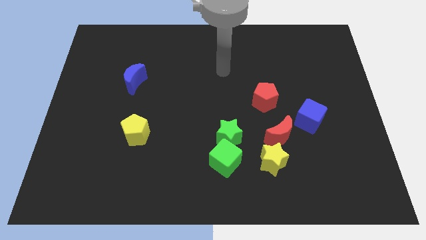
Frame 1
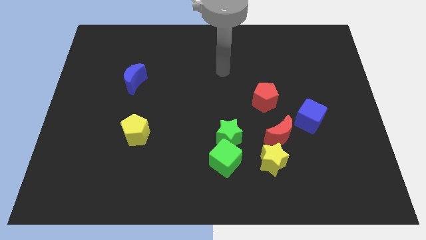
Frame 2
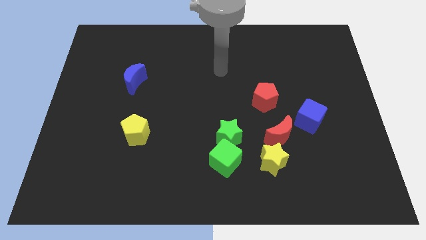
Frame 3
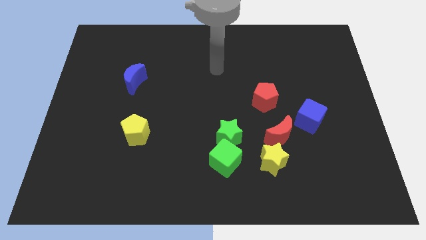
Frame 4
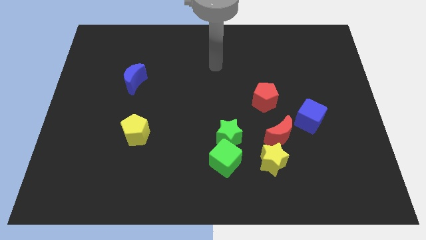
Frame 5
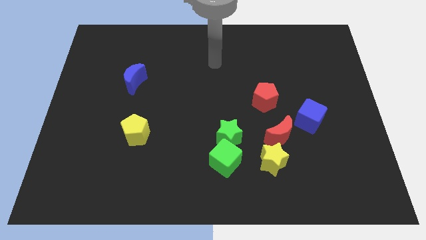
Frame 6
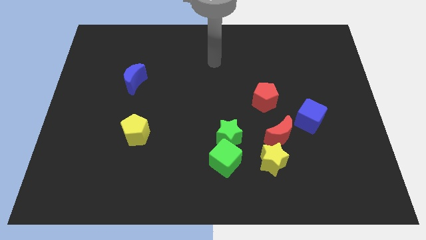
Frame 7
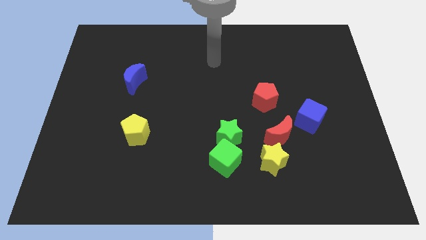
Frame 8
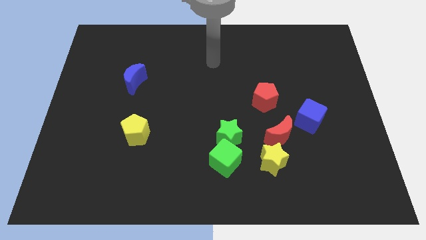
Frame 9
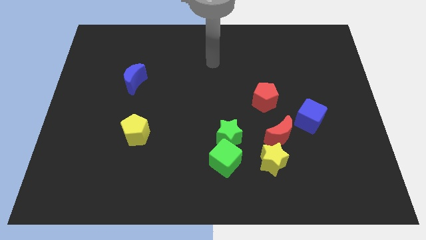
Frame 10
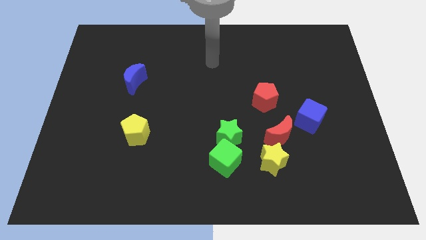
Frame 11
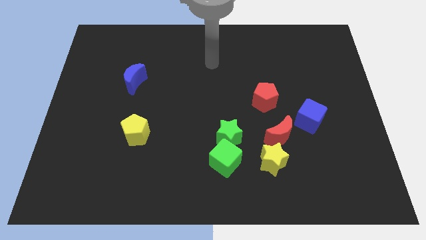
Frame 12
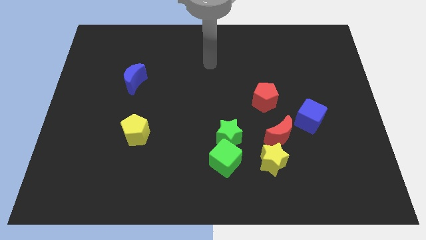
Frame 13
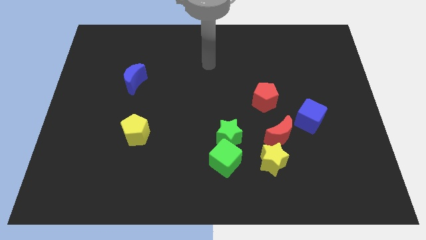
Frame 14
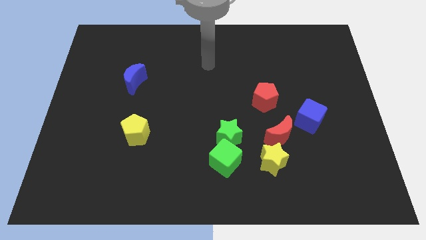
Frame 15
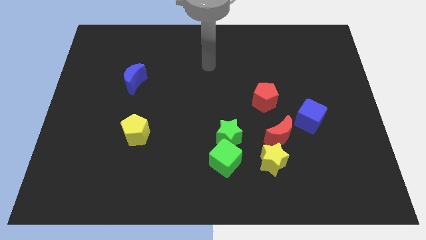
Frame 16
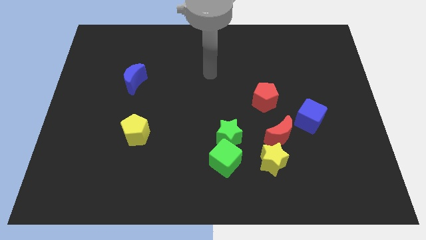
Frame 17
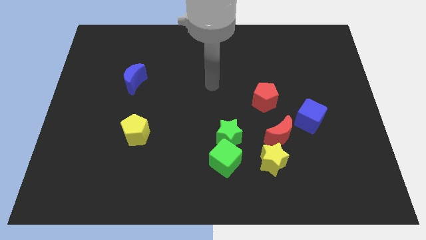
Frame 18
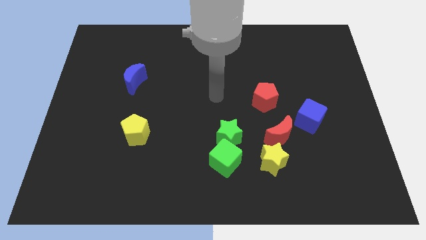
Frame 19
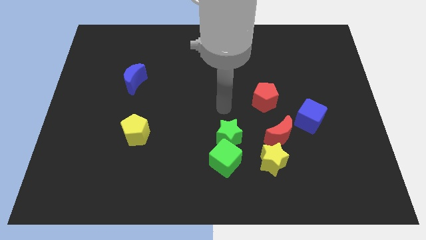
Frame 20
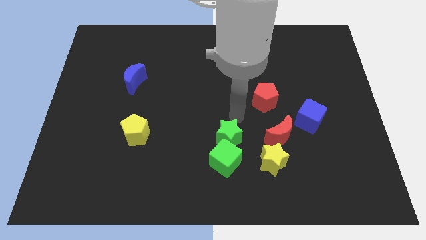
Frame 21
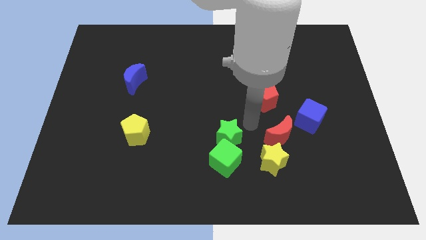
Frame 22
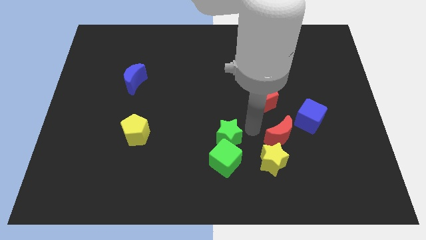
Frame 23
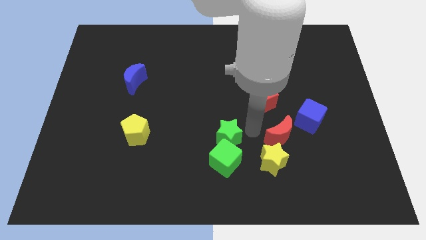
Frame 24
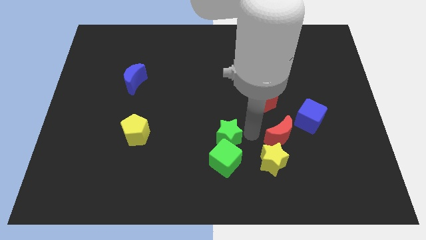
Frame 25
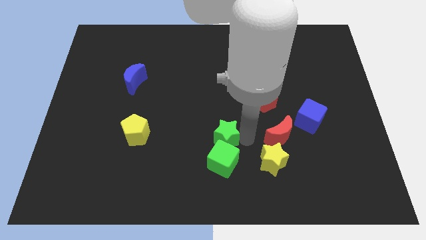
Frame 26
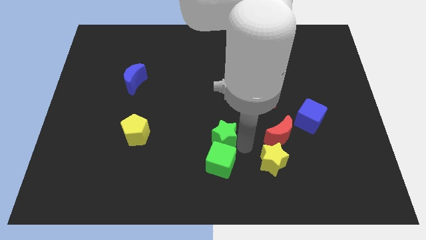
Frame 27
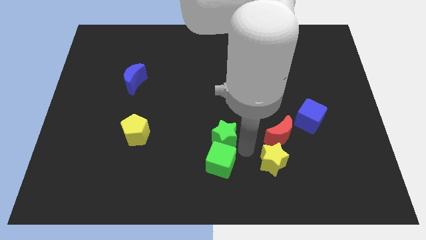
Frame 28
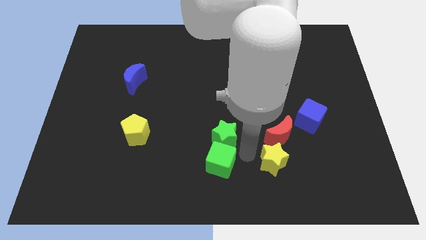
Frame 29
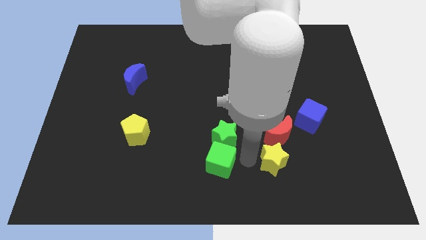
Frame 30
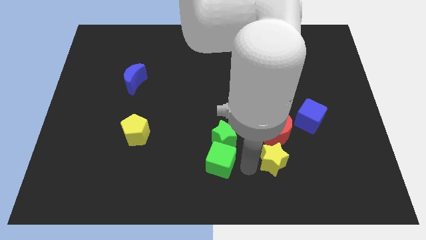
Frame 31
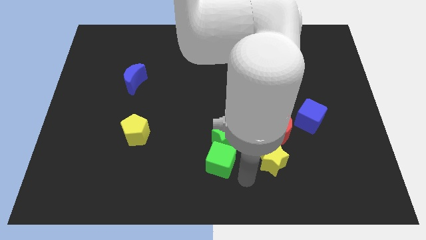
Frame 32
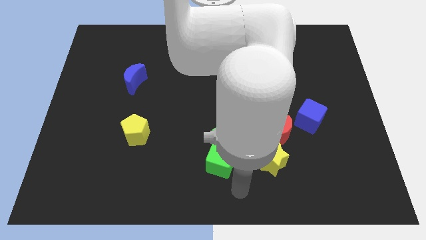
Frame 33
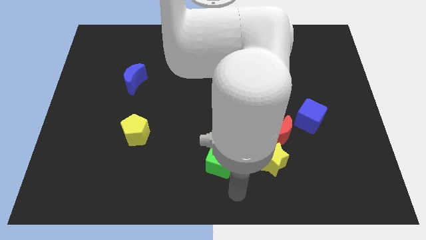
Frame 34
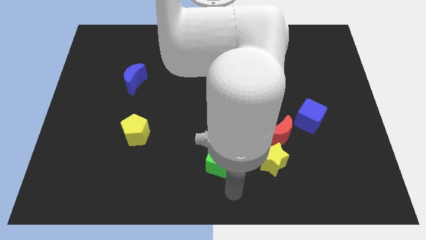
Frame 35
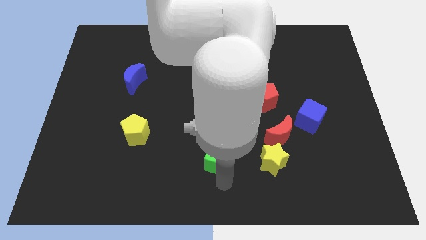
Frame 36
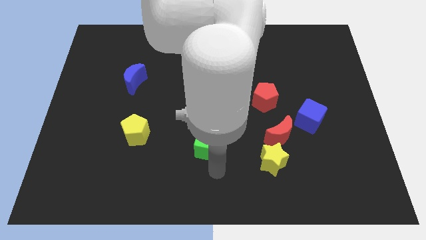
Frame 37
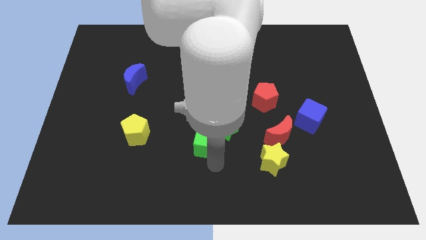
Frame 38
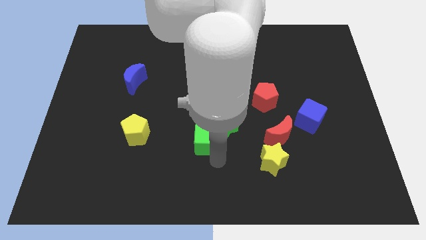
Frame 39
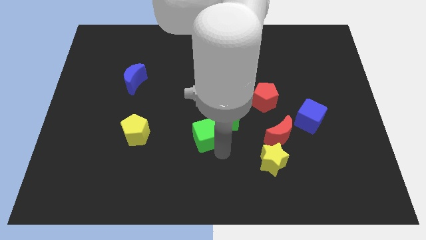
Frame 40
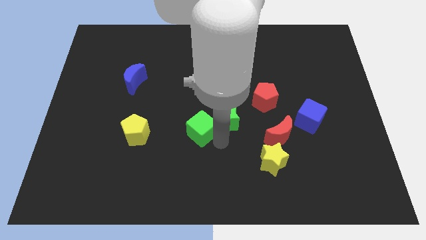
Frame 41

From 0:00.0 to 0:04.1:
move the green blocks to the top of the board

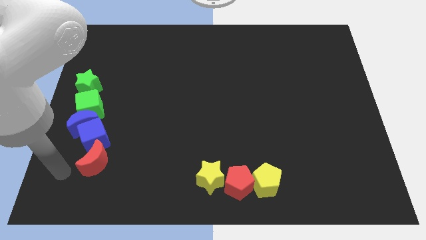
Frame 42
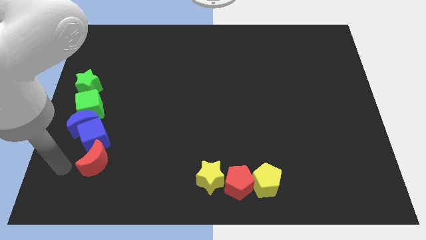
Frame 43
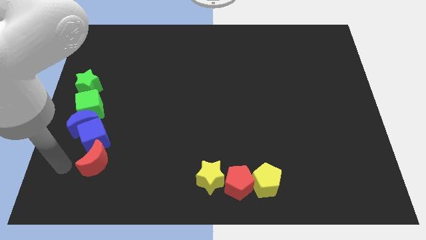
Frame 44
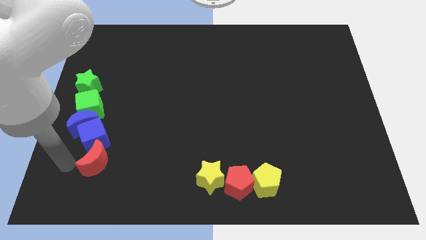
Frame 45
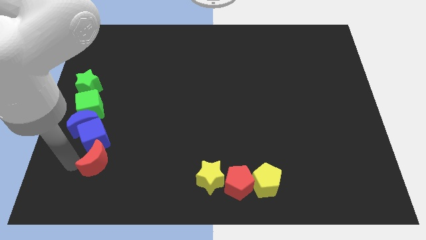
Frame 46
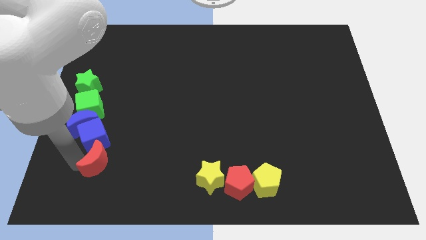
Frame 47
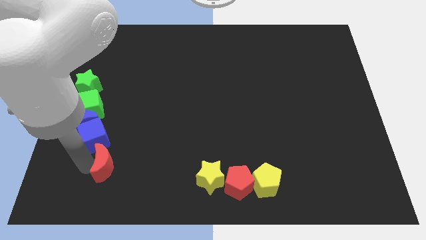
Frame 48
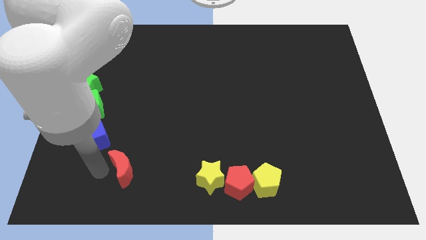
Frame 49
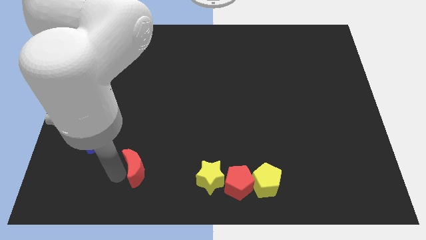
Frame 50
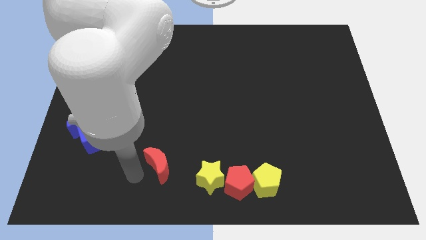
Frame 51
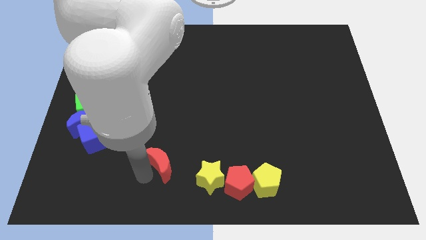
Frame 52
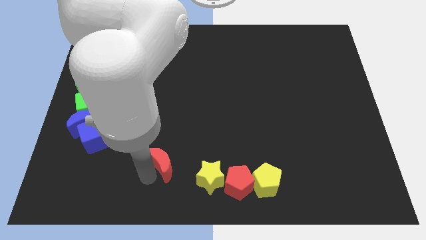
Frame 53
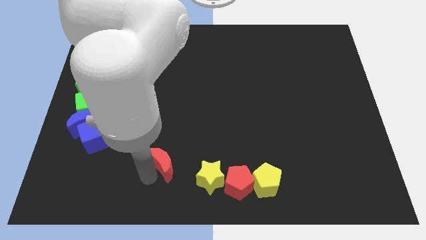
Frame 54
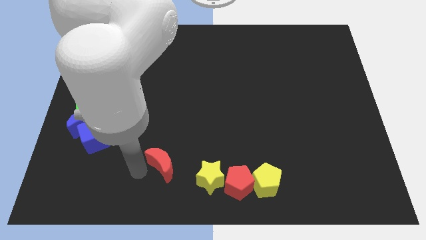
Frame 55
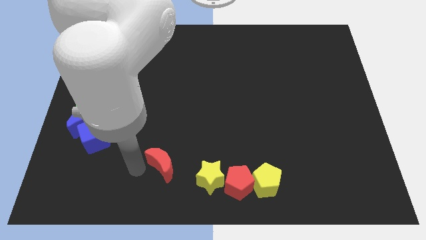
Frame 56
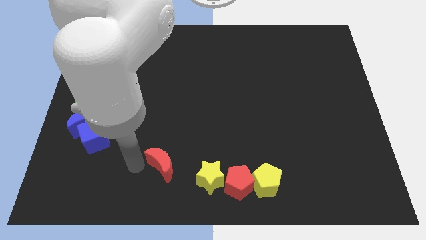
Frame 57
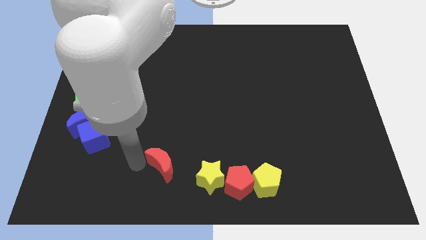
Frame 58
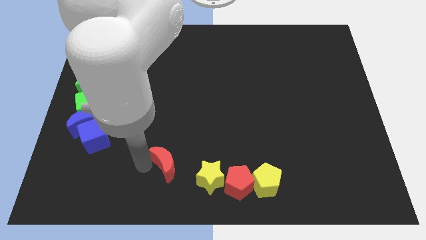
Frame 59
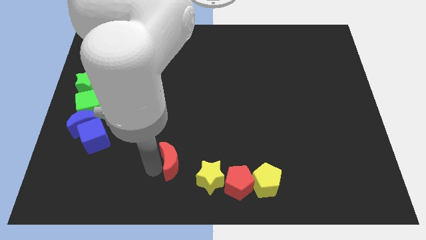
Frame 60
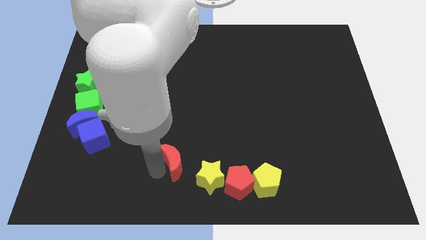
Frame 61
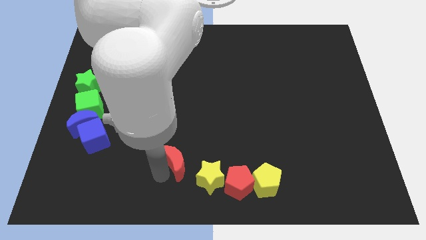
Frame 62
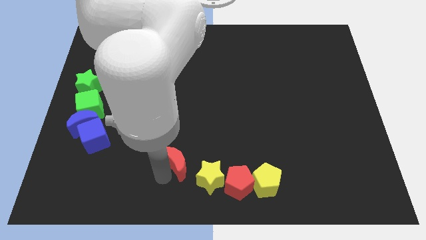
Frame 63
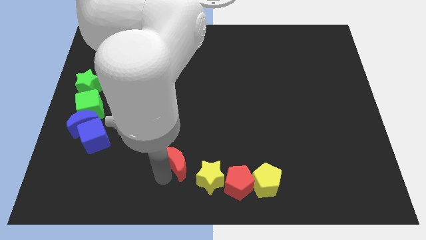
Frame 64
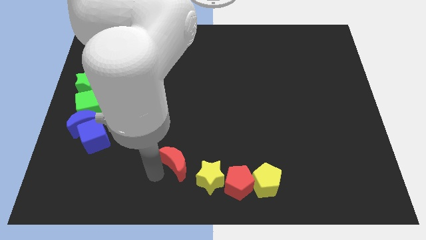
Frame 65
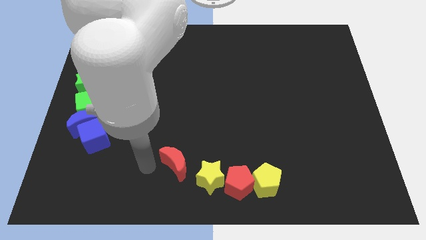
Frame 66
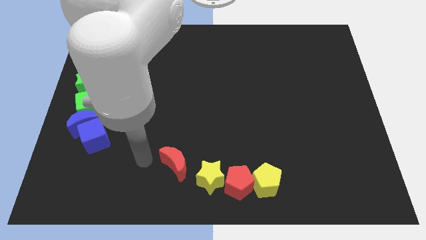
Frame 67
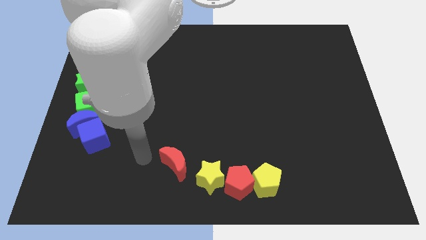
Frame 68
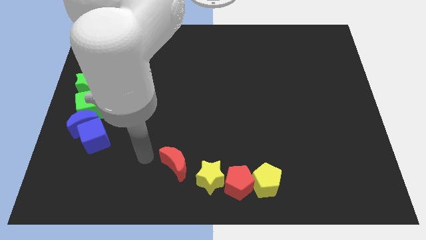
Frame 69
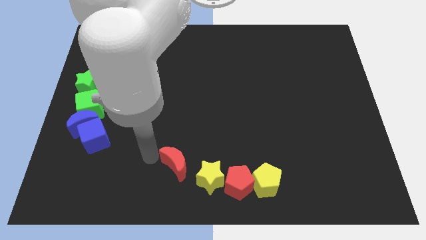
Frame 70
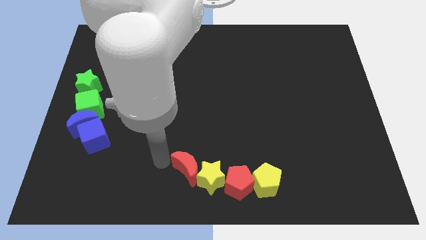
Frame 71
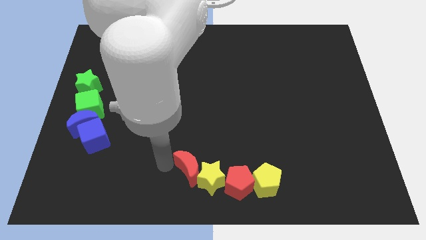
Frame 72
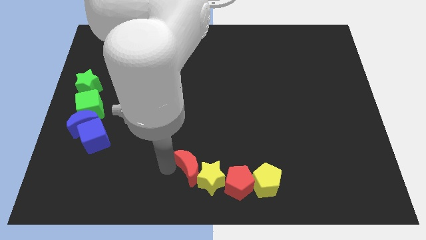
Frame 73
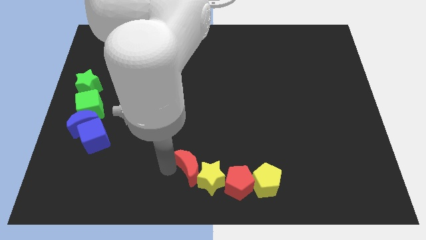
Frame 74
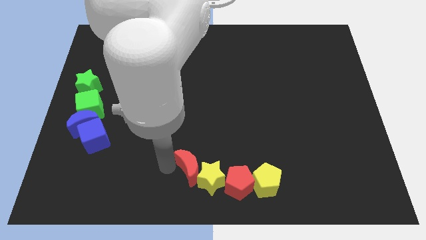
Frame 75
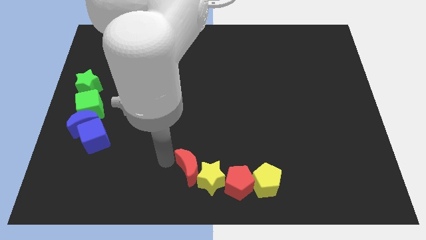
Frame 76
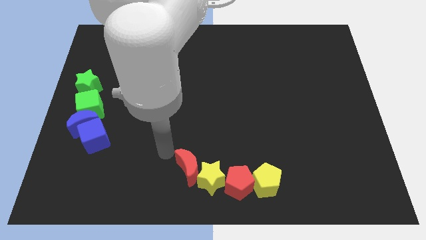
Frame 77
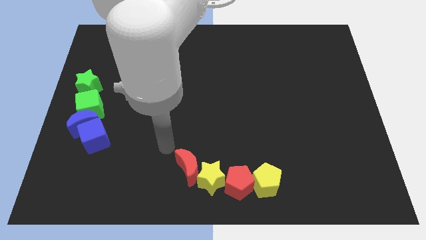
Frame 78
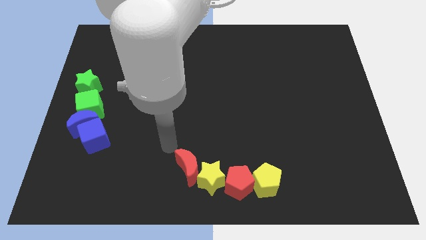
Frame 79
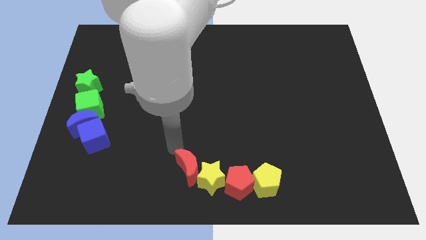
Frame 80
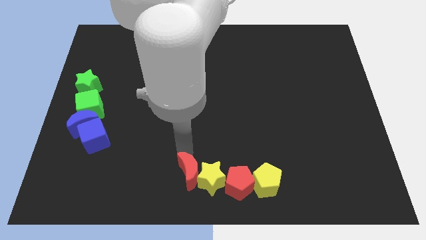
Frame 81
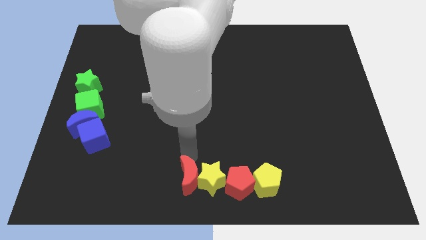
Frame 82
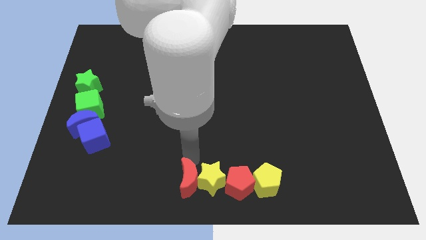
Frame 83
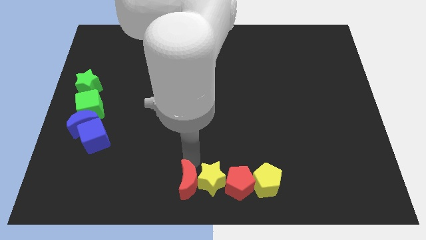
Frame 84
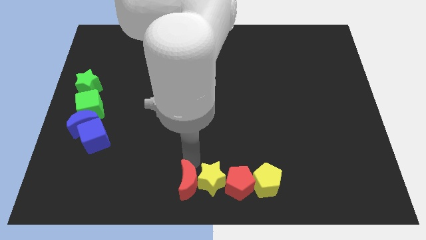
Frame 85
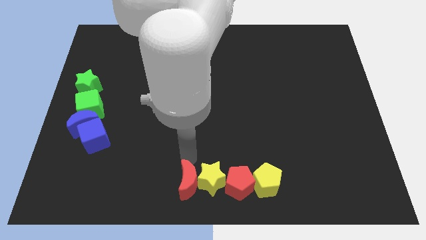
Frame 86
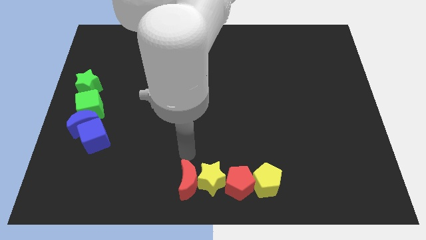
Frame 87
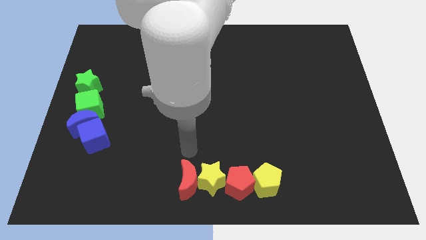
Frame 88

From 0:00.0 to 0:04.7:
move the red crescent to the group of blocks
